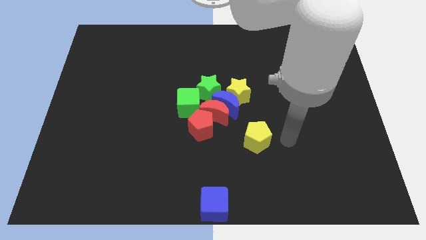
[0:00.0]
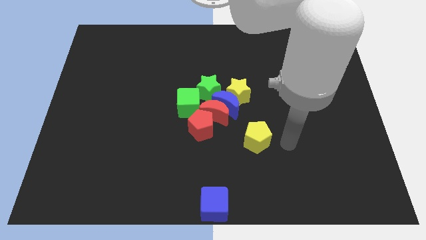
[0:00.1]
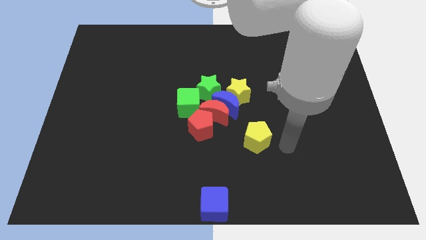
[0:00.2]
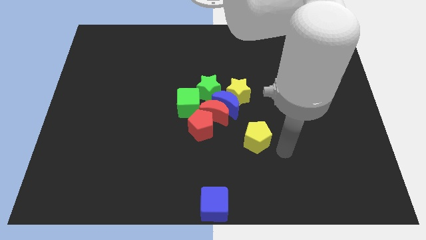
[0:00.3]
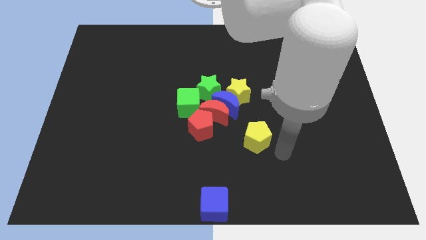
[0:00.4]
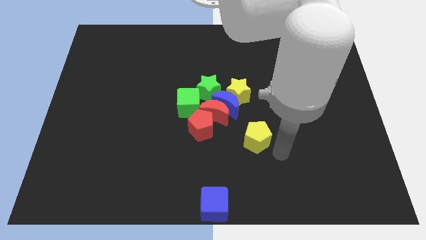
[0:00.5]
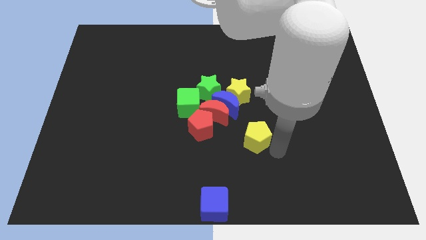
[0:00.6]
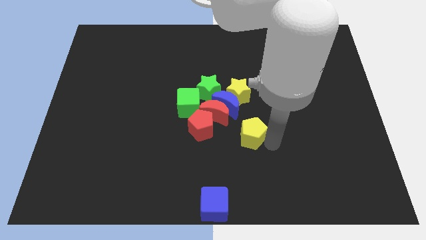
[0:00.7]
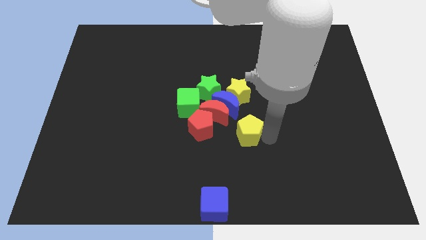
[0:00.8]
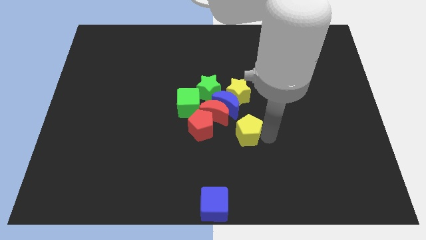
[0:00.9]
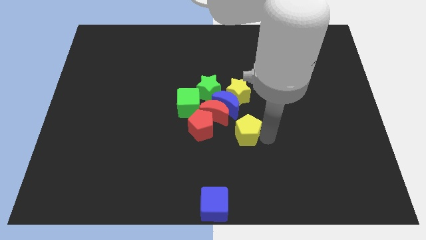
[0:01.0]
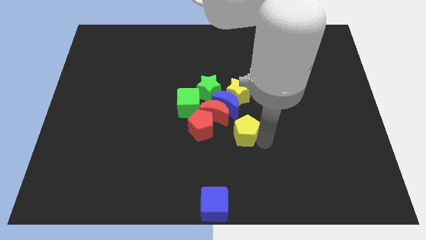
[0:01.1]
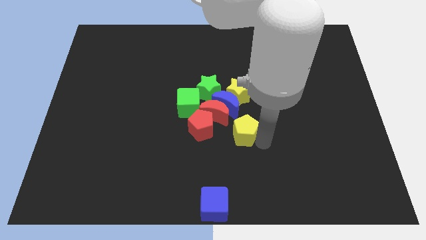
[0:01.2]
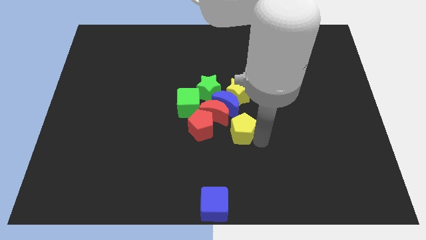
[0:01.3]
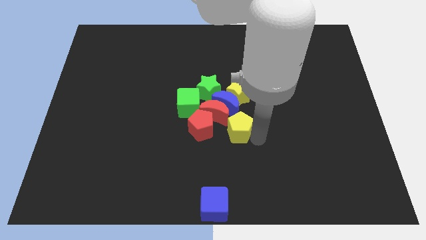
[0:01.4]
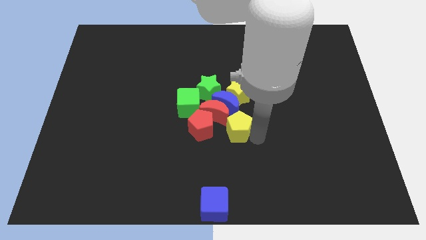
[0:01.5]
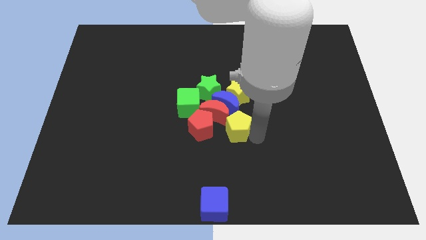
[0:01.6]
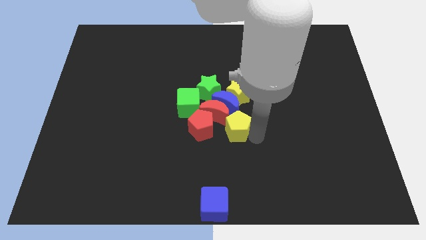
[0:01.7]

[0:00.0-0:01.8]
move the yellow pentagon close to the group of red blocks

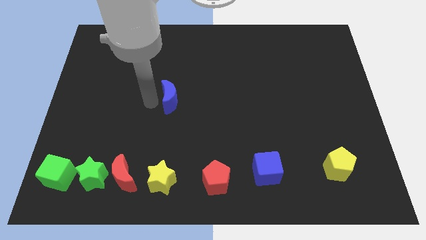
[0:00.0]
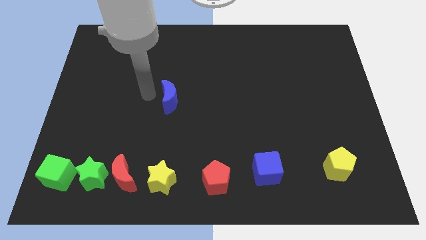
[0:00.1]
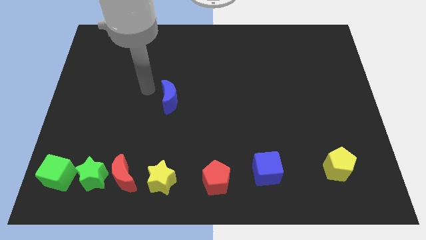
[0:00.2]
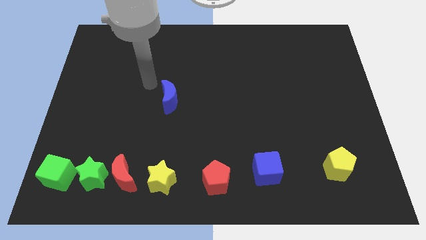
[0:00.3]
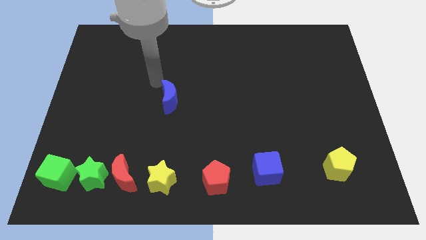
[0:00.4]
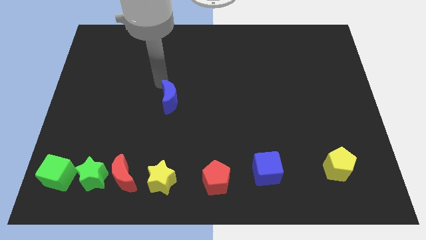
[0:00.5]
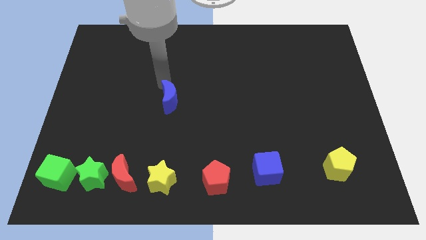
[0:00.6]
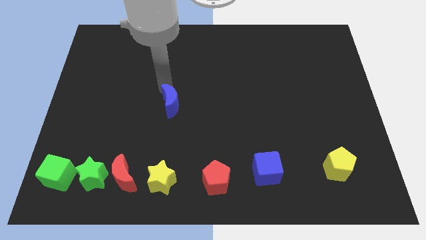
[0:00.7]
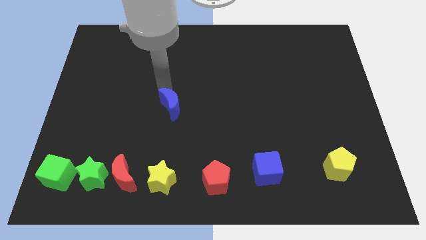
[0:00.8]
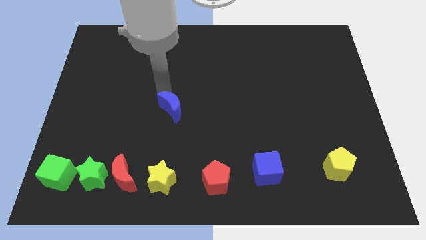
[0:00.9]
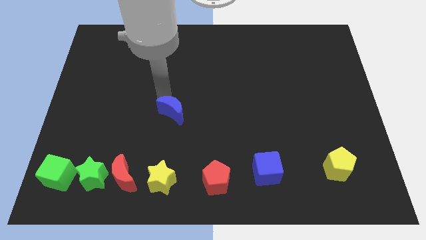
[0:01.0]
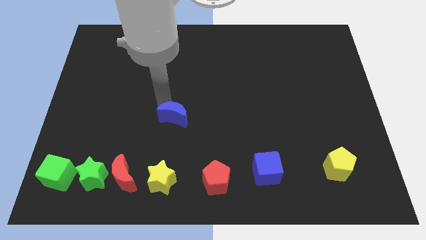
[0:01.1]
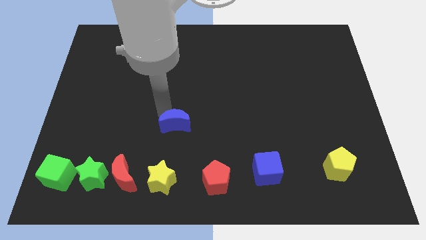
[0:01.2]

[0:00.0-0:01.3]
turn the blue moon towards the bottom

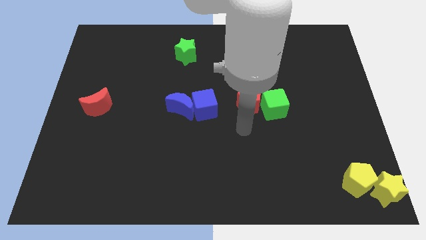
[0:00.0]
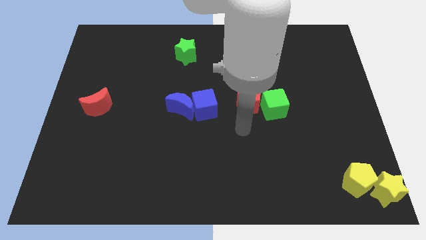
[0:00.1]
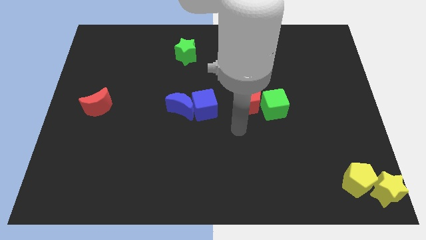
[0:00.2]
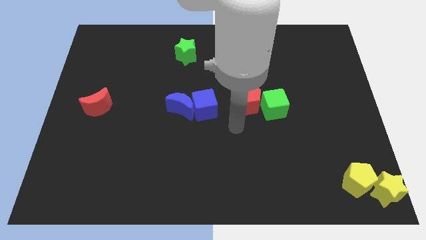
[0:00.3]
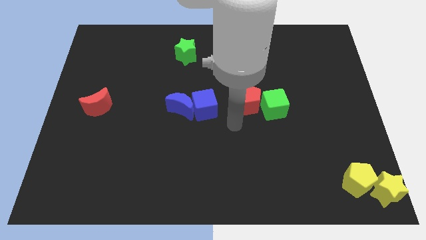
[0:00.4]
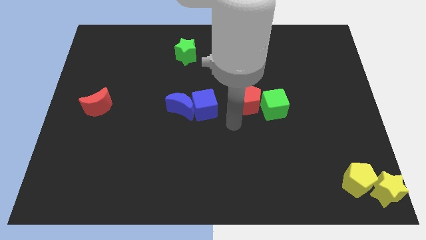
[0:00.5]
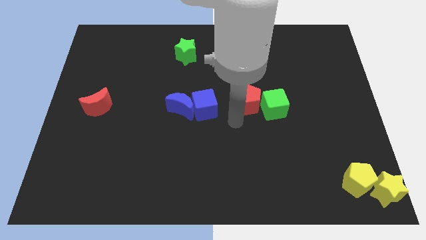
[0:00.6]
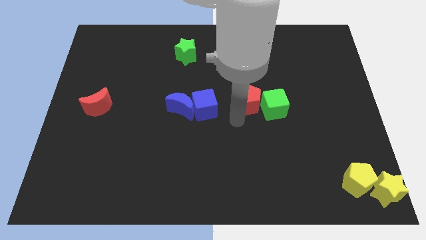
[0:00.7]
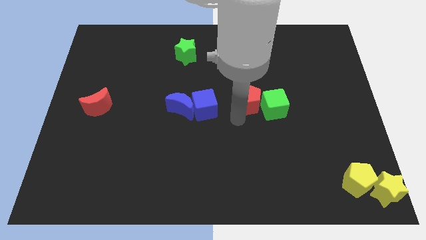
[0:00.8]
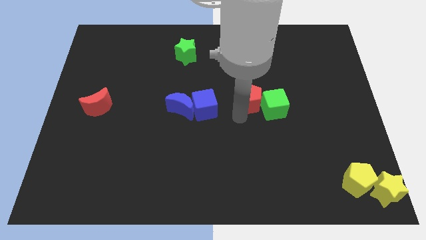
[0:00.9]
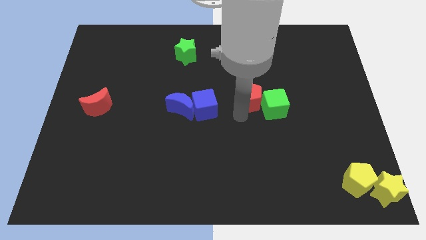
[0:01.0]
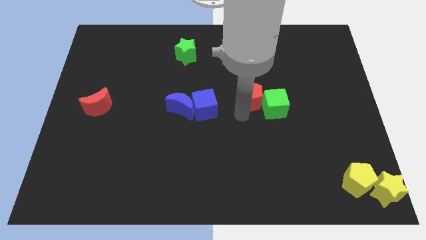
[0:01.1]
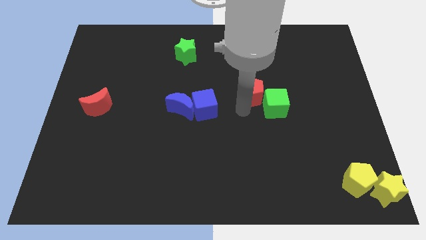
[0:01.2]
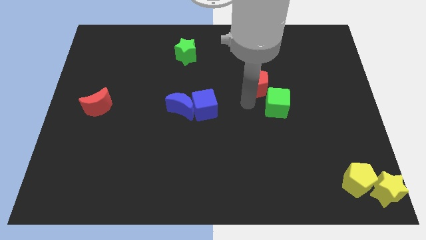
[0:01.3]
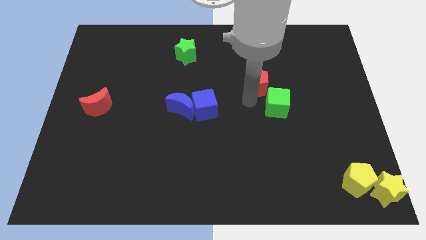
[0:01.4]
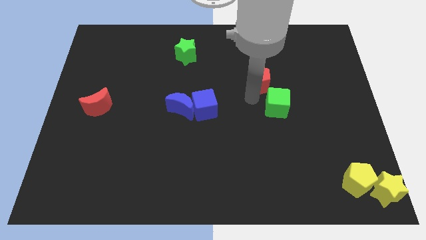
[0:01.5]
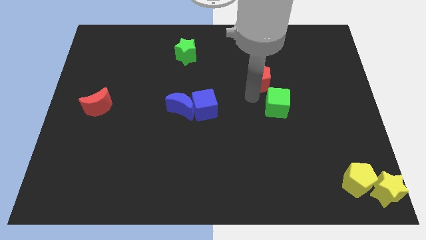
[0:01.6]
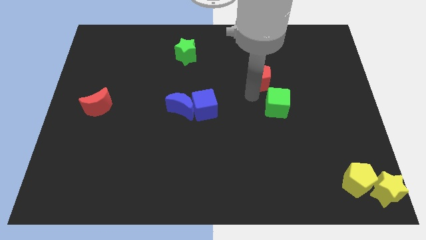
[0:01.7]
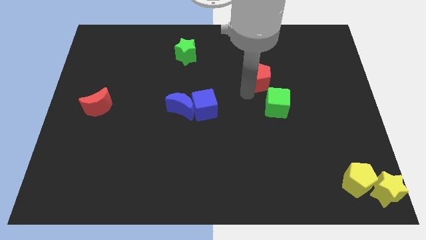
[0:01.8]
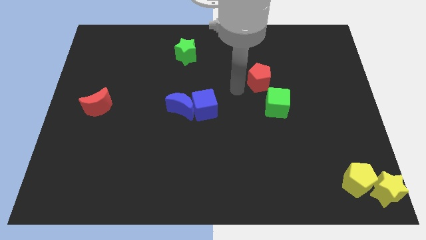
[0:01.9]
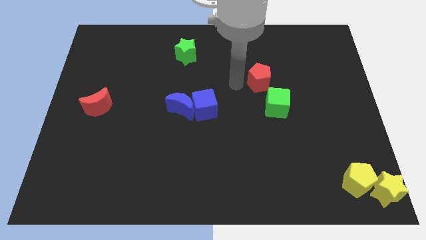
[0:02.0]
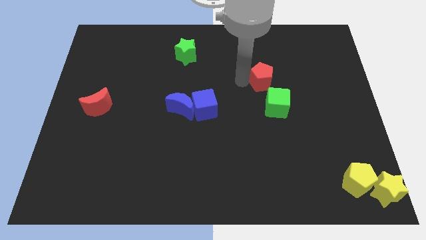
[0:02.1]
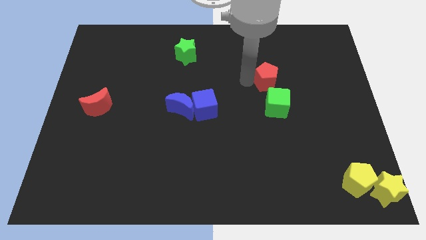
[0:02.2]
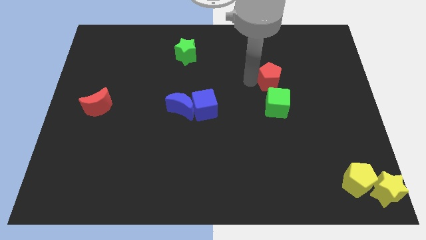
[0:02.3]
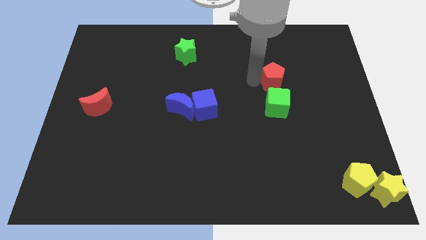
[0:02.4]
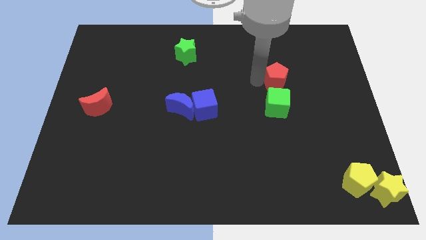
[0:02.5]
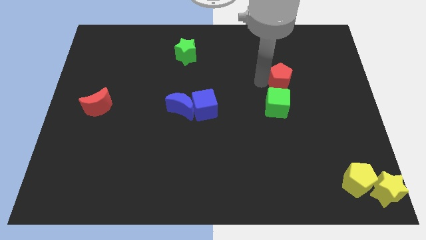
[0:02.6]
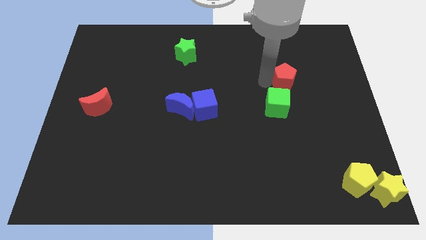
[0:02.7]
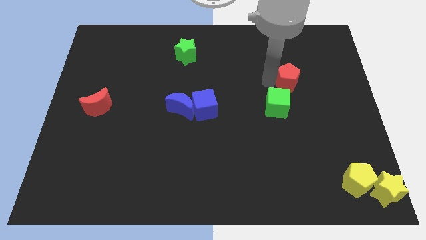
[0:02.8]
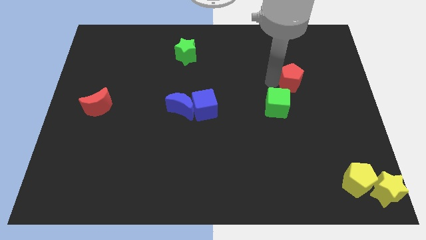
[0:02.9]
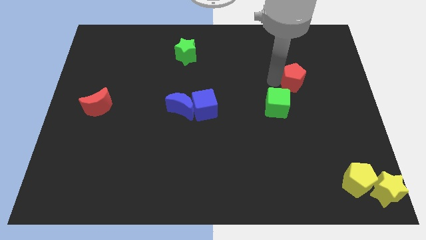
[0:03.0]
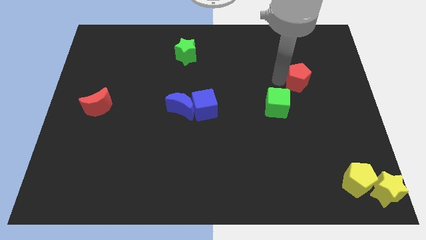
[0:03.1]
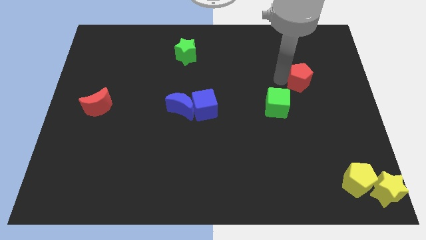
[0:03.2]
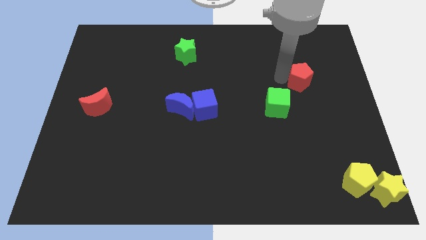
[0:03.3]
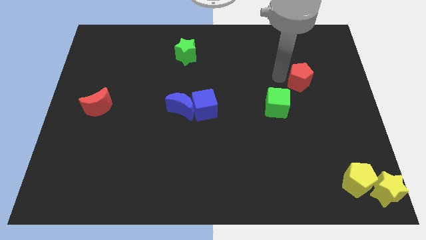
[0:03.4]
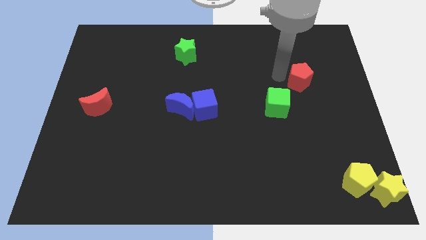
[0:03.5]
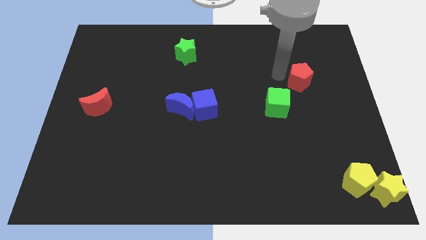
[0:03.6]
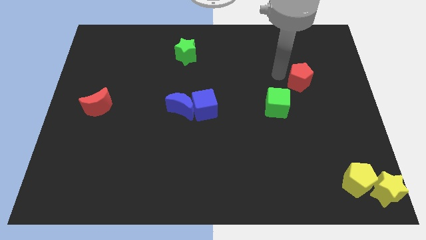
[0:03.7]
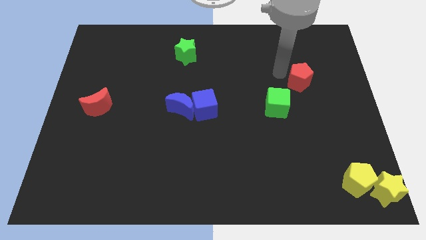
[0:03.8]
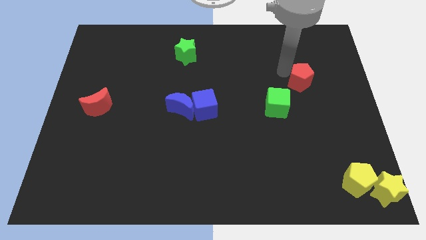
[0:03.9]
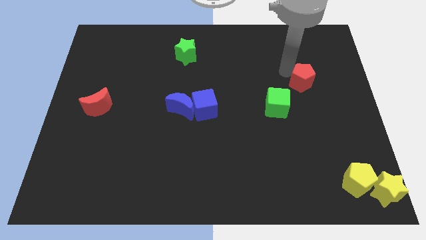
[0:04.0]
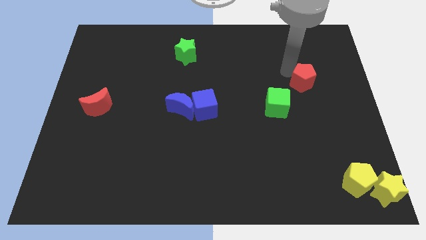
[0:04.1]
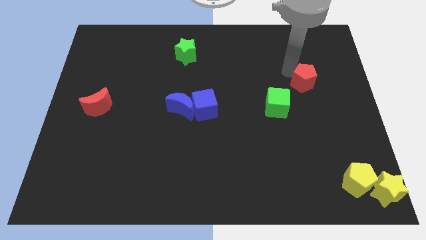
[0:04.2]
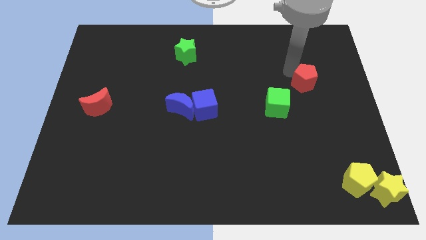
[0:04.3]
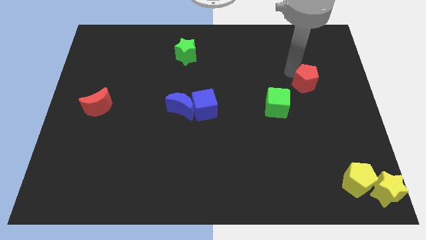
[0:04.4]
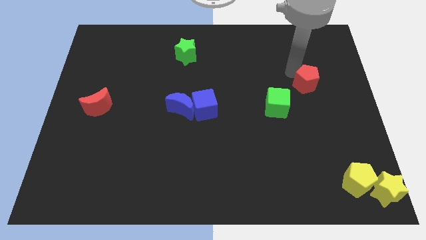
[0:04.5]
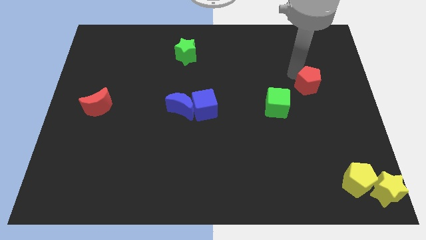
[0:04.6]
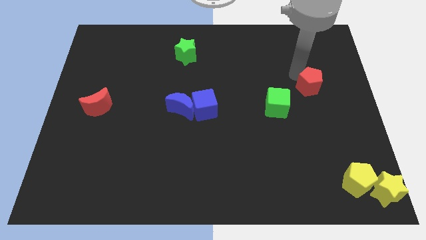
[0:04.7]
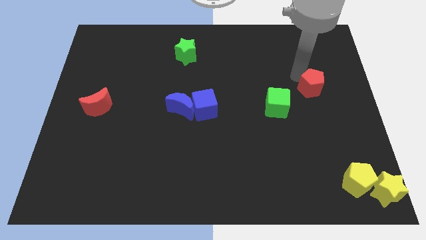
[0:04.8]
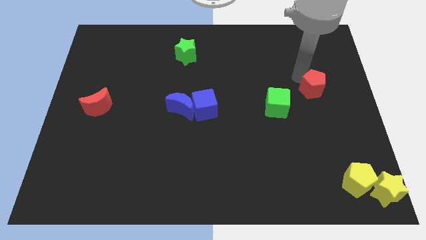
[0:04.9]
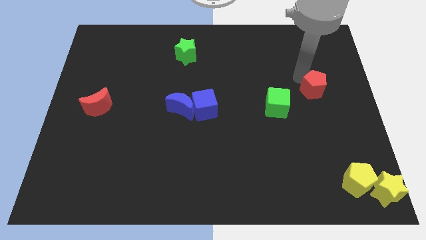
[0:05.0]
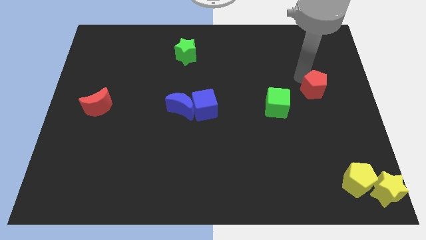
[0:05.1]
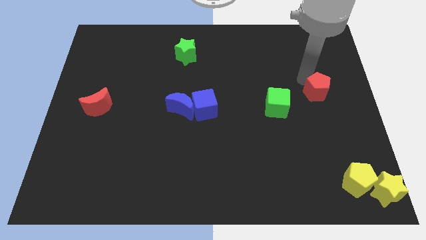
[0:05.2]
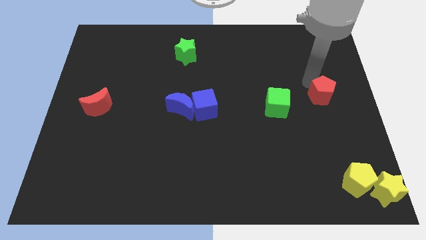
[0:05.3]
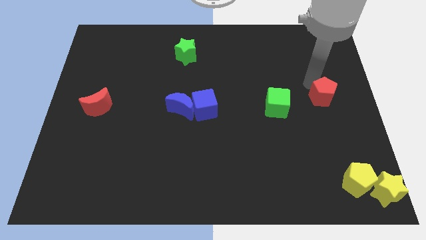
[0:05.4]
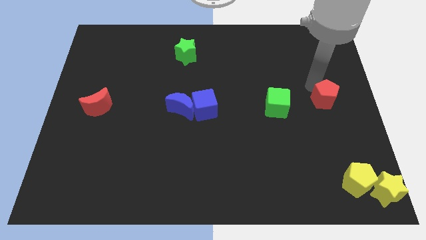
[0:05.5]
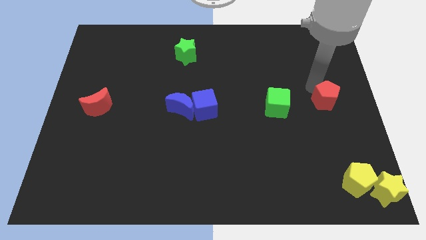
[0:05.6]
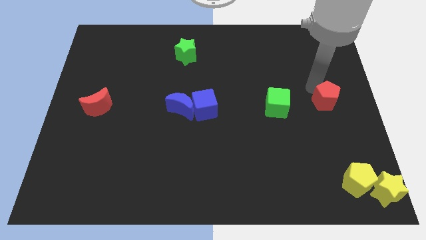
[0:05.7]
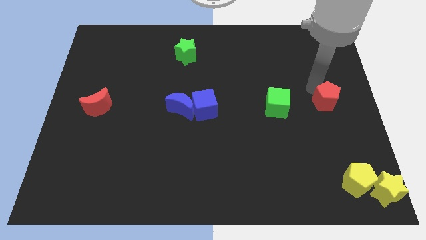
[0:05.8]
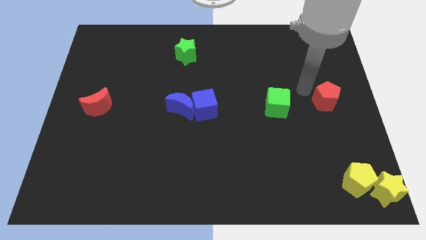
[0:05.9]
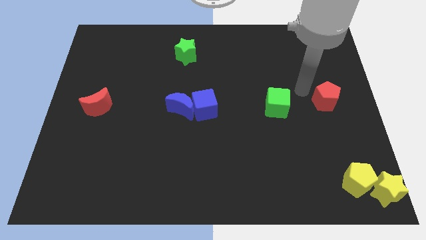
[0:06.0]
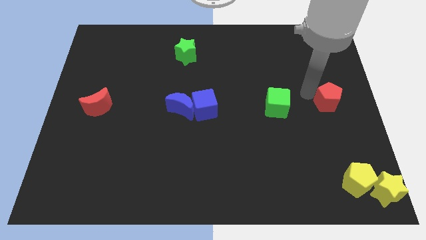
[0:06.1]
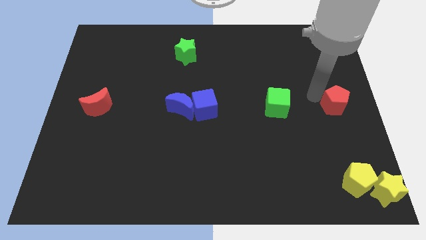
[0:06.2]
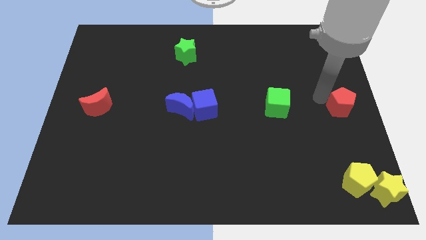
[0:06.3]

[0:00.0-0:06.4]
place the red pentagon to the right of the green cube
